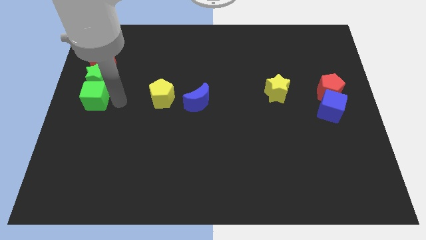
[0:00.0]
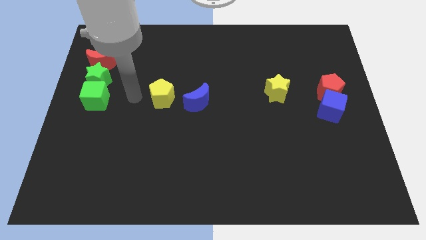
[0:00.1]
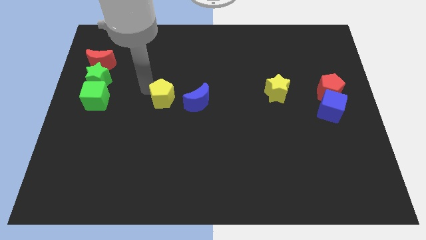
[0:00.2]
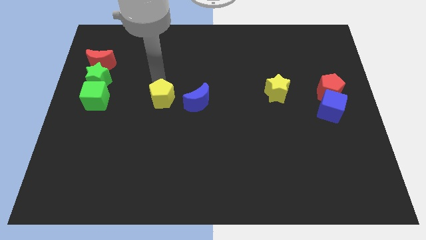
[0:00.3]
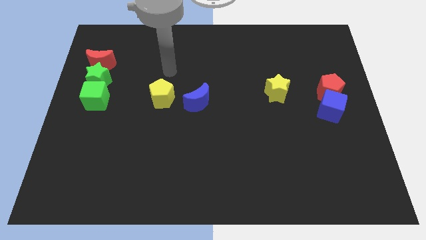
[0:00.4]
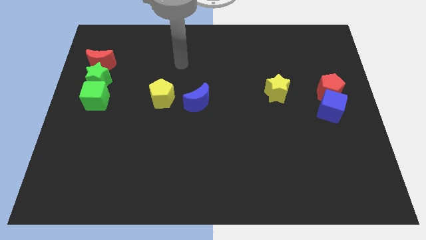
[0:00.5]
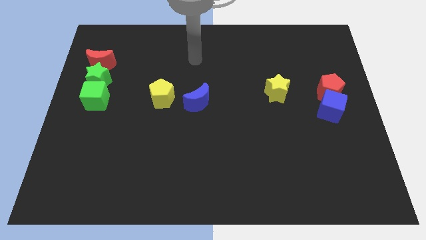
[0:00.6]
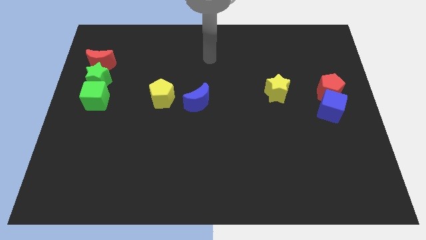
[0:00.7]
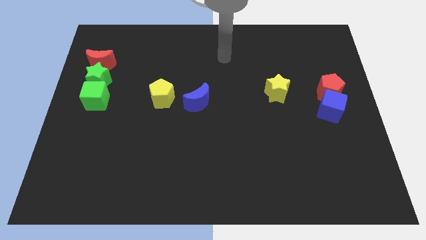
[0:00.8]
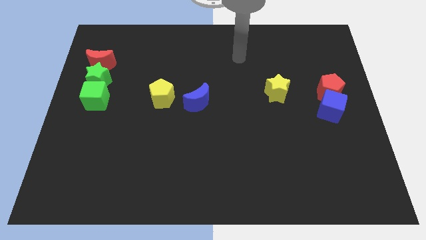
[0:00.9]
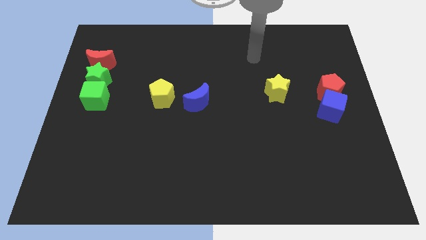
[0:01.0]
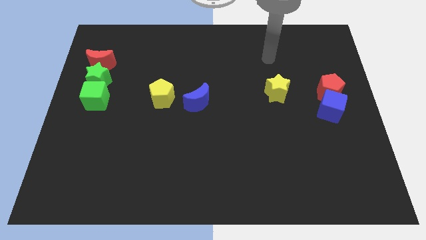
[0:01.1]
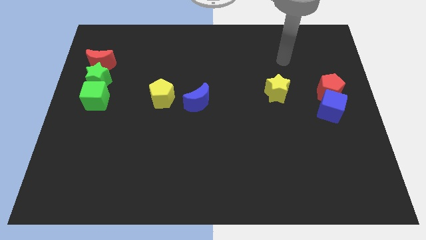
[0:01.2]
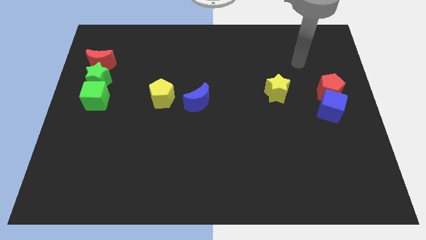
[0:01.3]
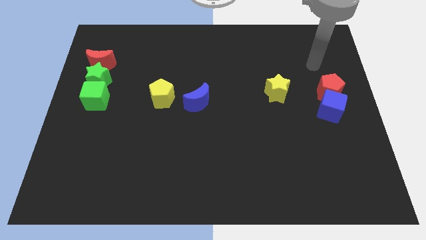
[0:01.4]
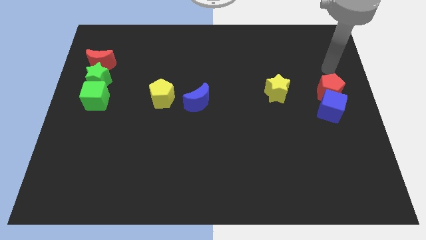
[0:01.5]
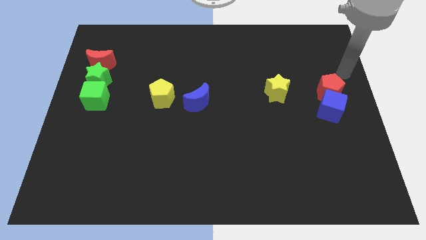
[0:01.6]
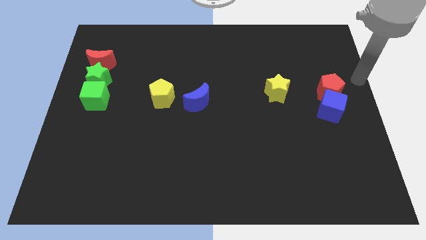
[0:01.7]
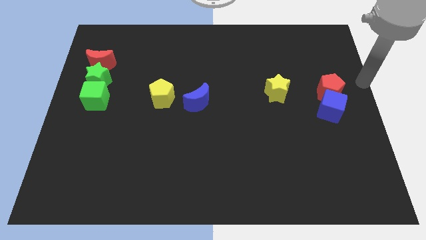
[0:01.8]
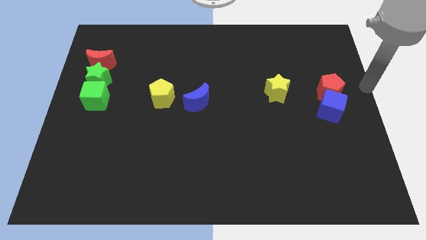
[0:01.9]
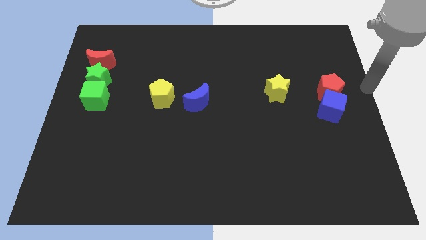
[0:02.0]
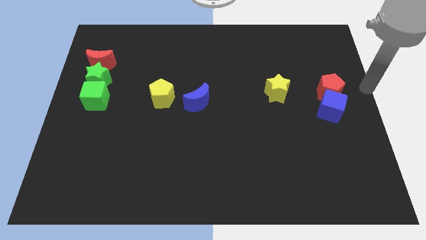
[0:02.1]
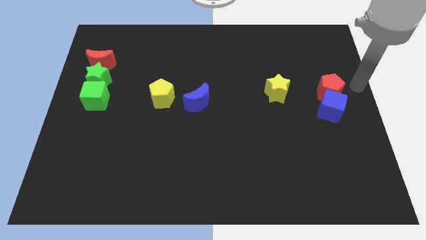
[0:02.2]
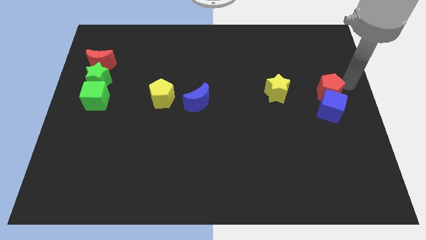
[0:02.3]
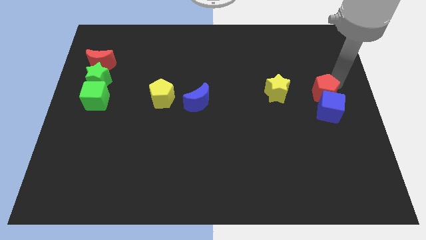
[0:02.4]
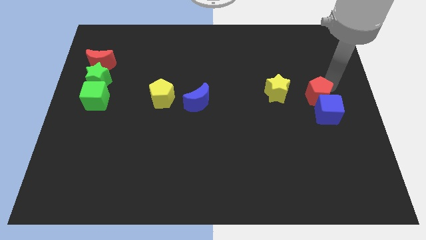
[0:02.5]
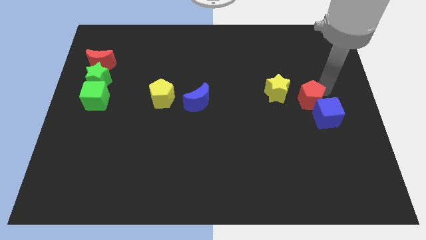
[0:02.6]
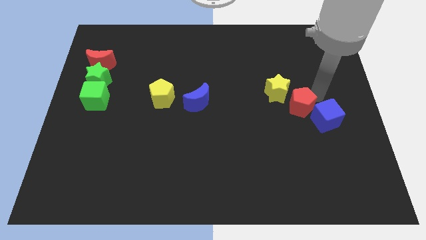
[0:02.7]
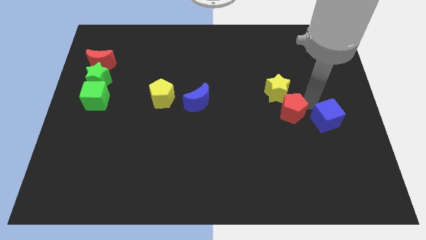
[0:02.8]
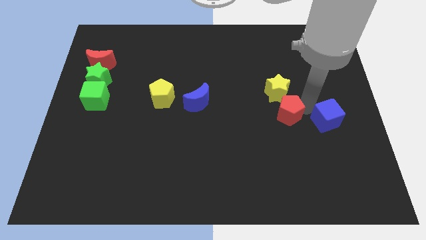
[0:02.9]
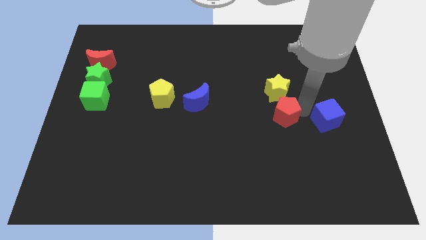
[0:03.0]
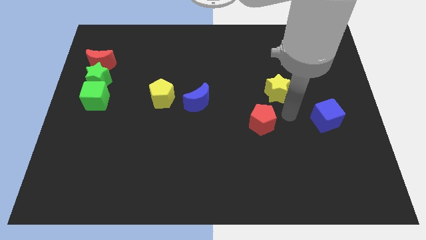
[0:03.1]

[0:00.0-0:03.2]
place red pentagon below yellow star

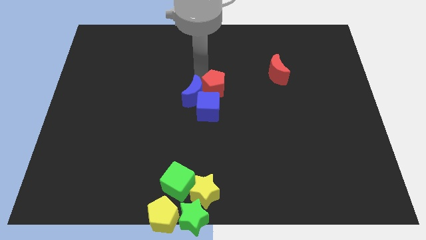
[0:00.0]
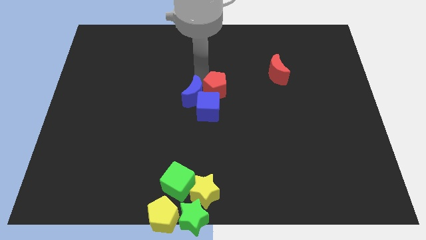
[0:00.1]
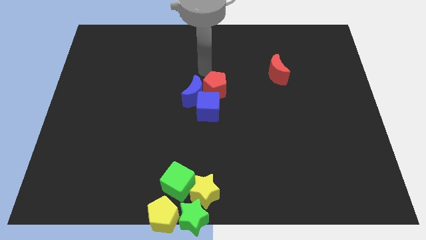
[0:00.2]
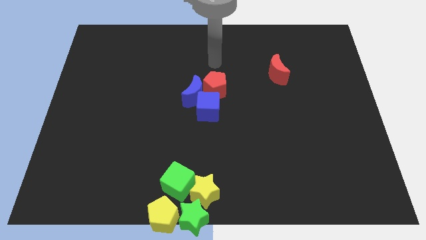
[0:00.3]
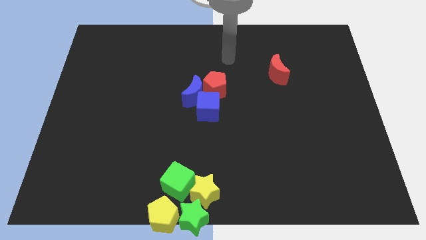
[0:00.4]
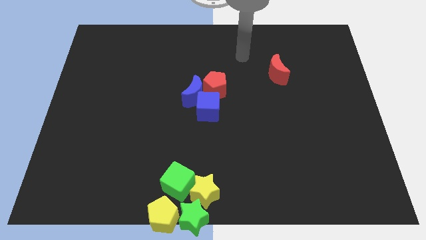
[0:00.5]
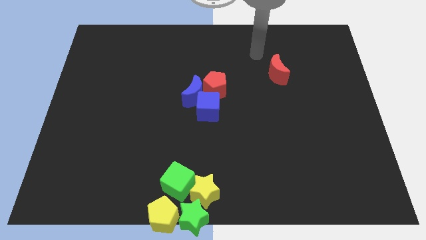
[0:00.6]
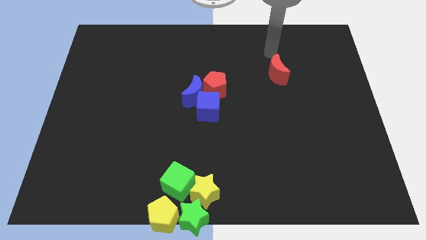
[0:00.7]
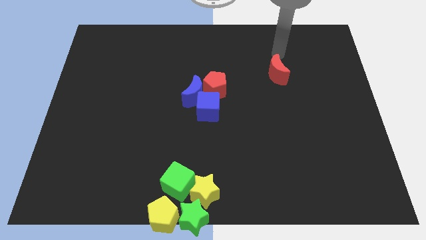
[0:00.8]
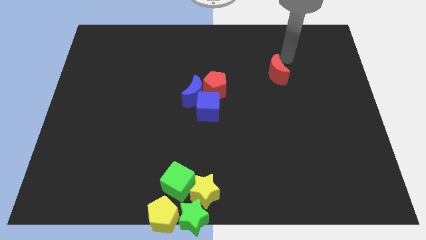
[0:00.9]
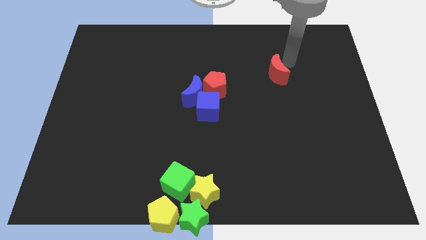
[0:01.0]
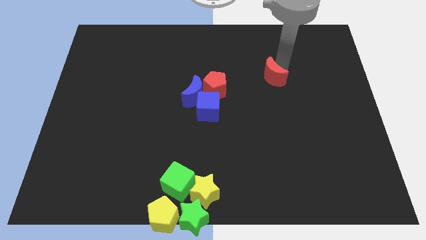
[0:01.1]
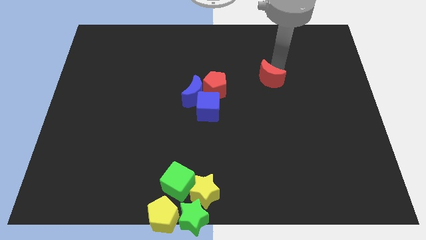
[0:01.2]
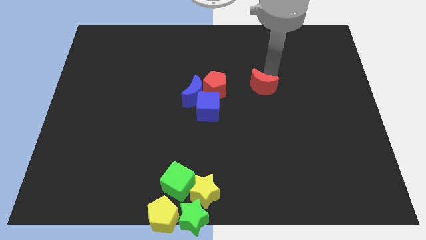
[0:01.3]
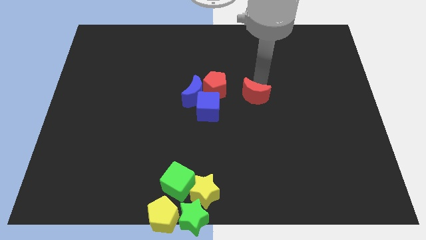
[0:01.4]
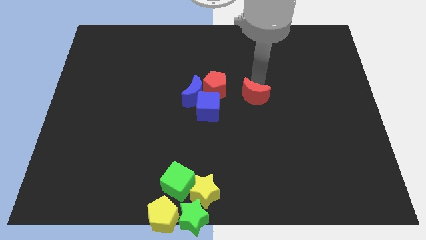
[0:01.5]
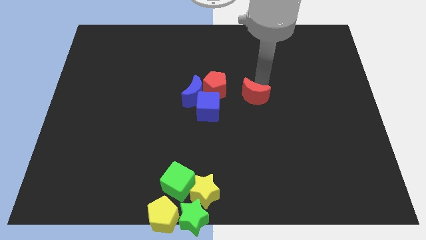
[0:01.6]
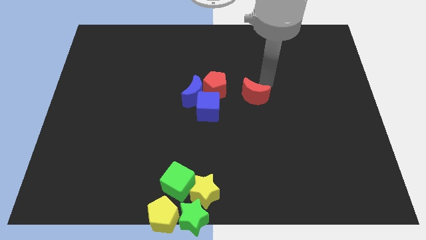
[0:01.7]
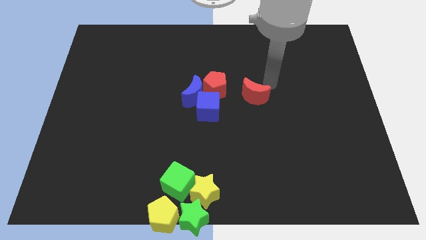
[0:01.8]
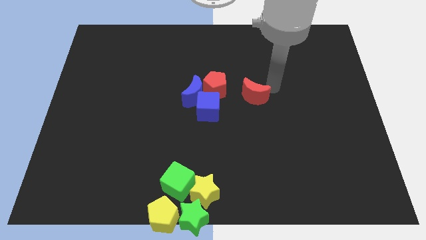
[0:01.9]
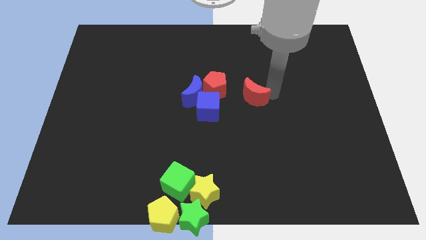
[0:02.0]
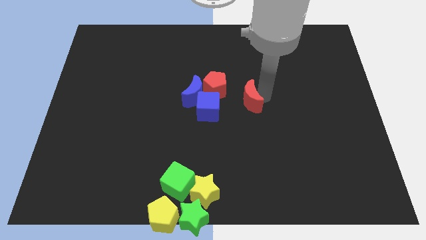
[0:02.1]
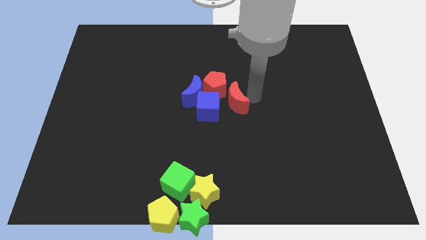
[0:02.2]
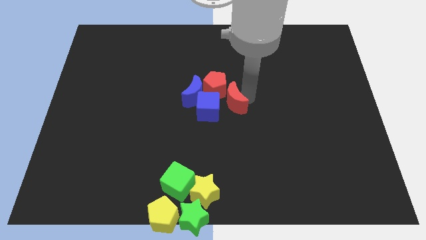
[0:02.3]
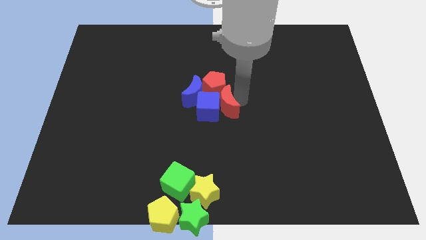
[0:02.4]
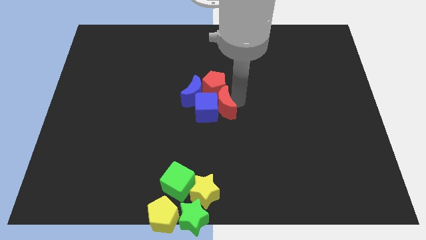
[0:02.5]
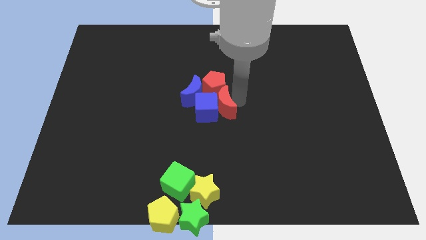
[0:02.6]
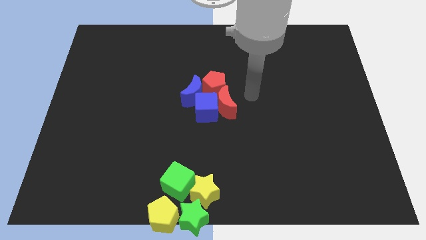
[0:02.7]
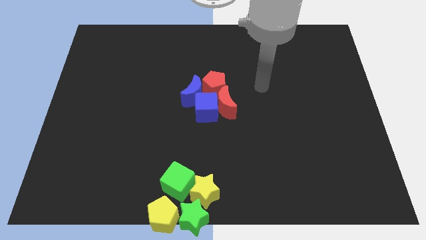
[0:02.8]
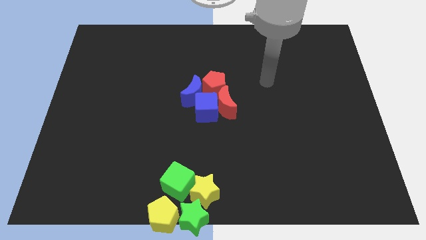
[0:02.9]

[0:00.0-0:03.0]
move the red moon towards the center of the board

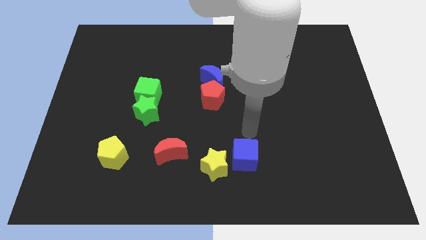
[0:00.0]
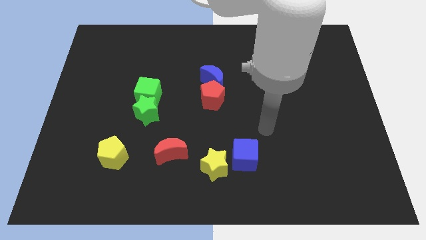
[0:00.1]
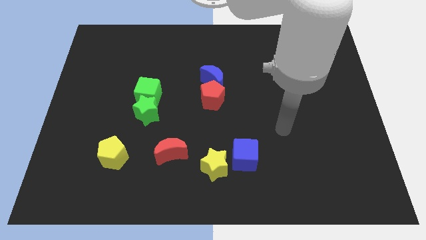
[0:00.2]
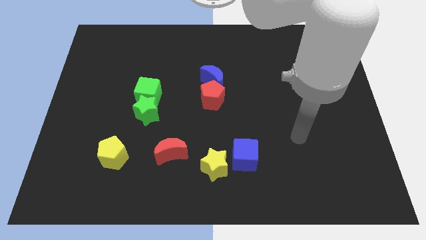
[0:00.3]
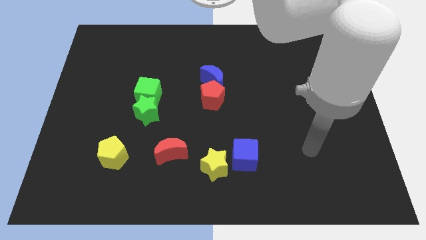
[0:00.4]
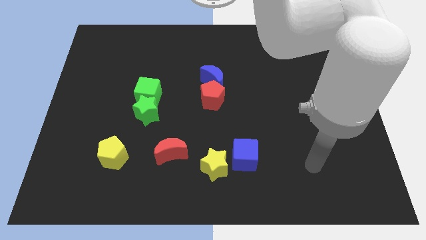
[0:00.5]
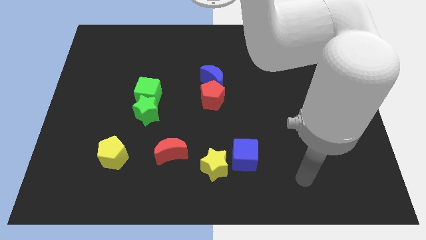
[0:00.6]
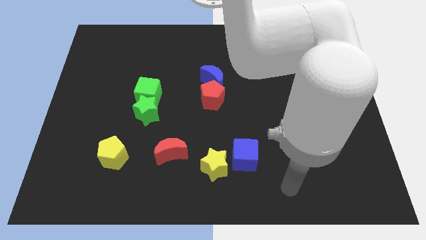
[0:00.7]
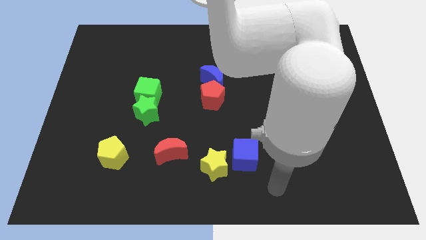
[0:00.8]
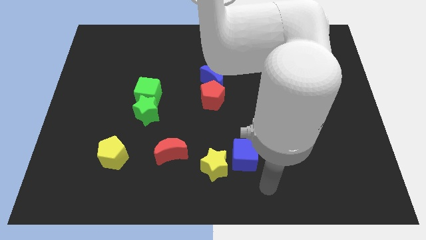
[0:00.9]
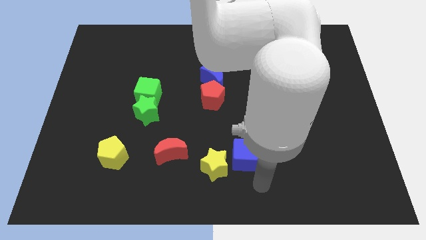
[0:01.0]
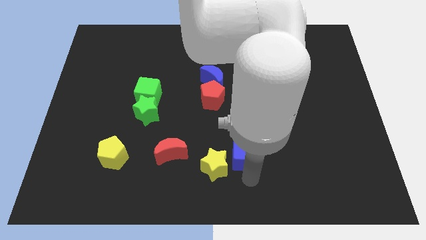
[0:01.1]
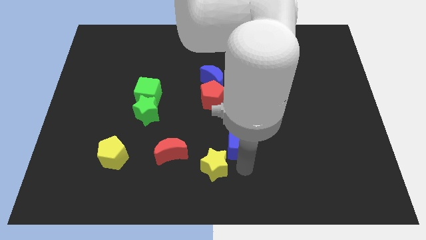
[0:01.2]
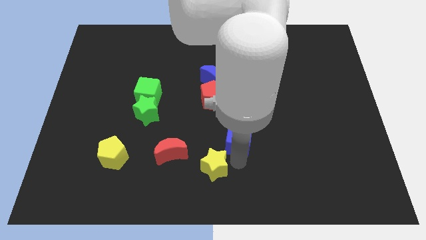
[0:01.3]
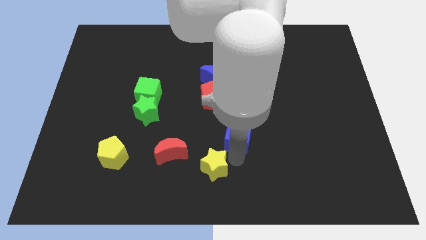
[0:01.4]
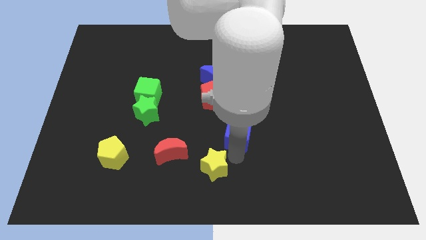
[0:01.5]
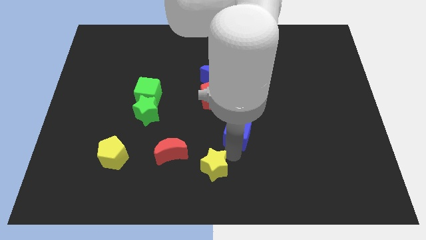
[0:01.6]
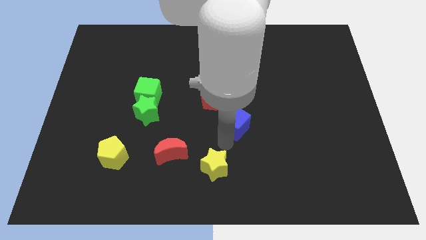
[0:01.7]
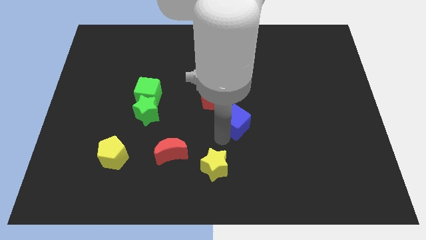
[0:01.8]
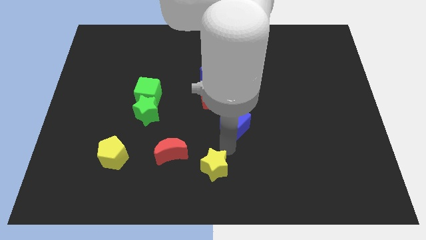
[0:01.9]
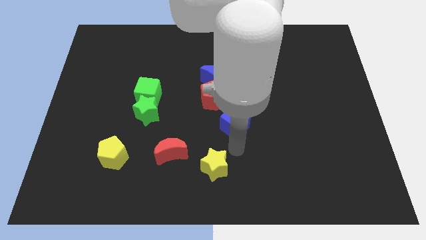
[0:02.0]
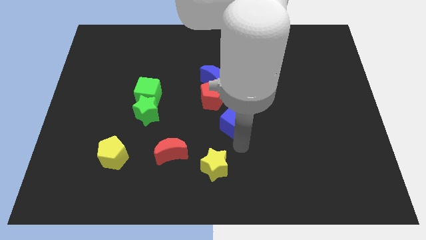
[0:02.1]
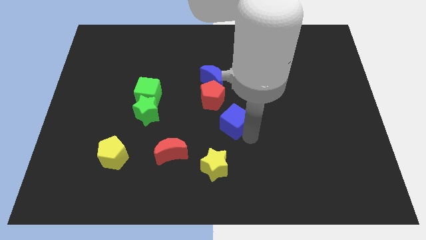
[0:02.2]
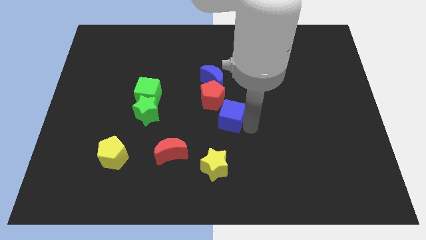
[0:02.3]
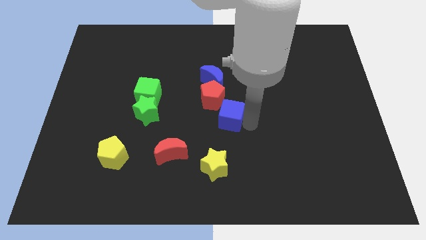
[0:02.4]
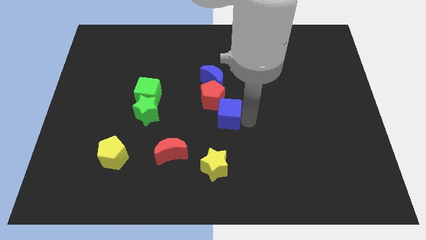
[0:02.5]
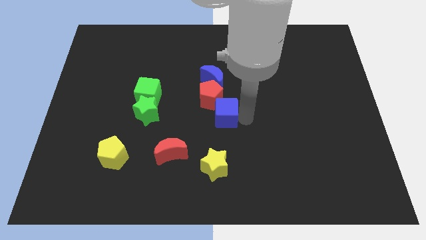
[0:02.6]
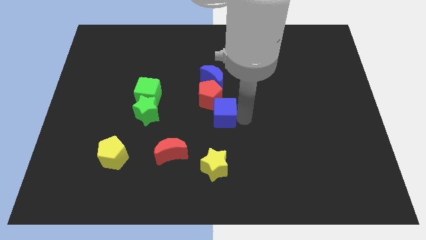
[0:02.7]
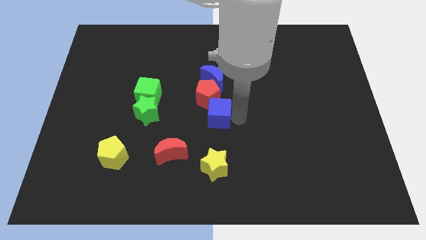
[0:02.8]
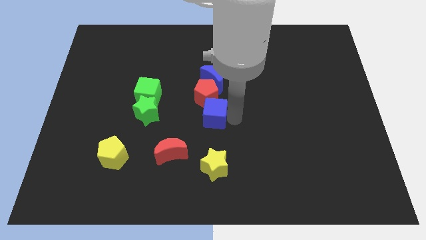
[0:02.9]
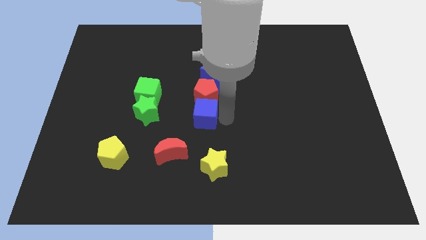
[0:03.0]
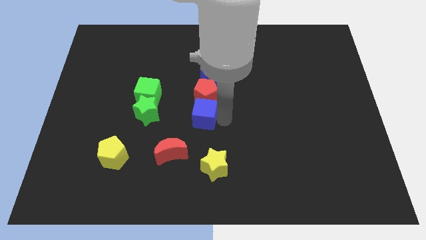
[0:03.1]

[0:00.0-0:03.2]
push blue cube to center of the board
